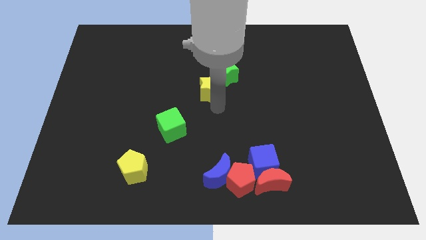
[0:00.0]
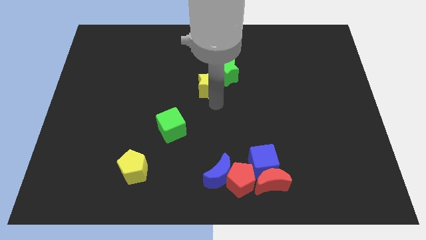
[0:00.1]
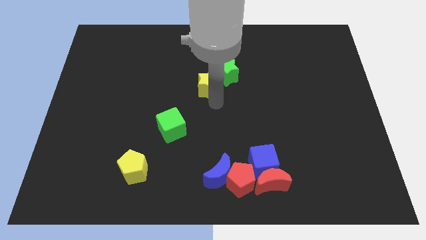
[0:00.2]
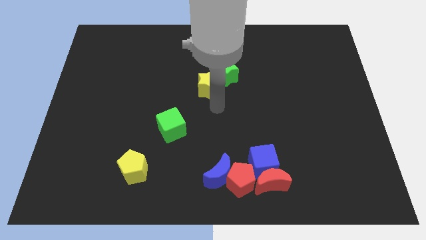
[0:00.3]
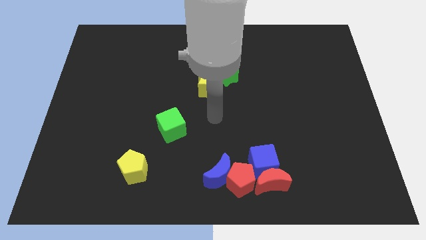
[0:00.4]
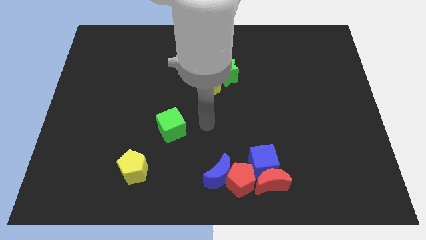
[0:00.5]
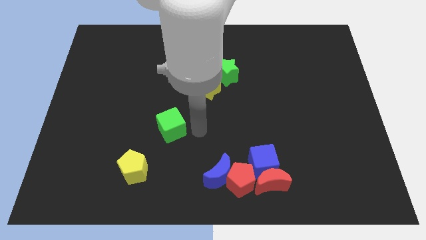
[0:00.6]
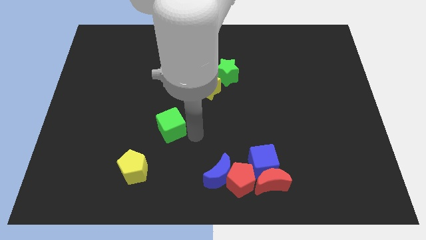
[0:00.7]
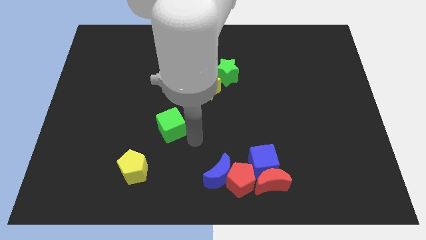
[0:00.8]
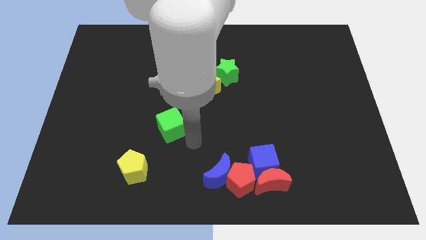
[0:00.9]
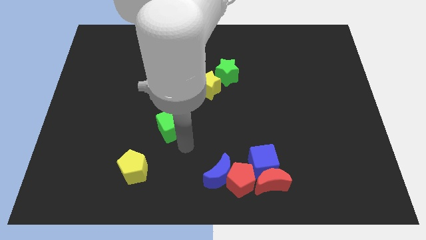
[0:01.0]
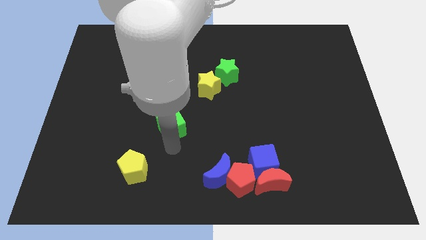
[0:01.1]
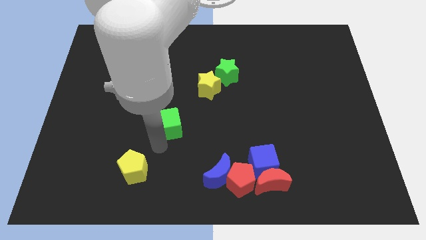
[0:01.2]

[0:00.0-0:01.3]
point your arm below green cube

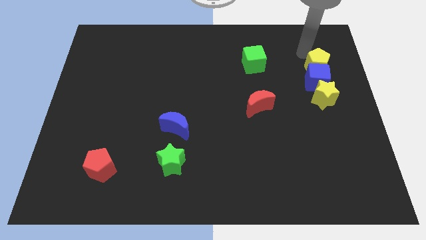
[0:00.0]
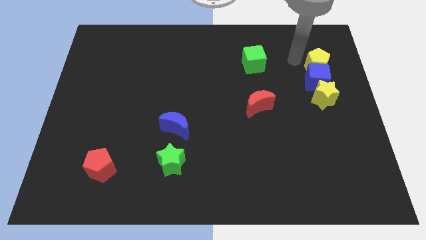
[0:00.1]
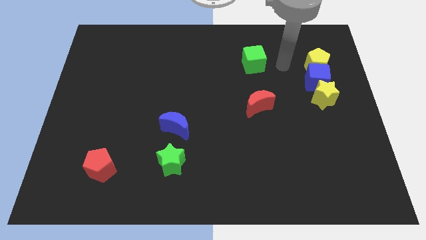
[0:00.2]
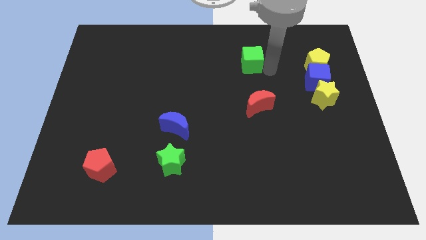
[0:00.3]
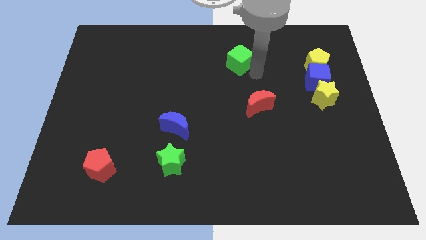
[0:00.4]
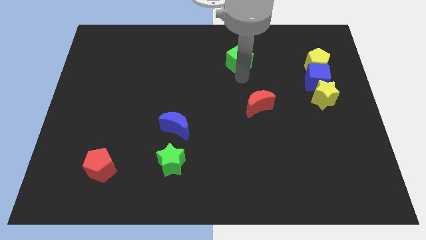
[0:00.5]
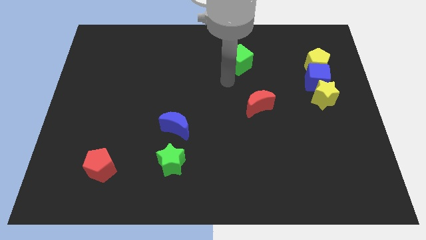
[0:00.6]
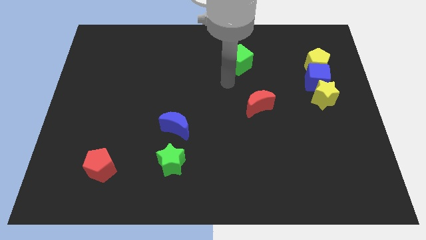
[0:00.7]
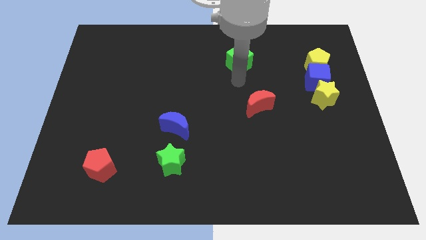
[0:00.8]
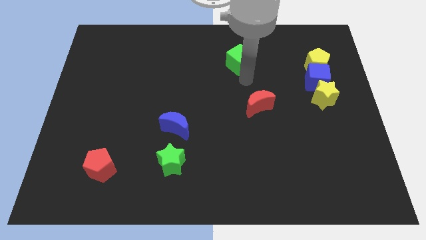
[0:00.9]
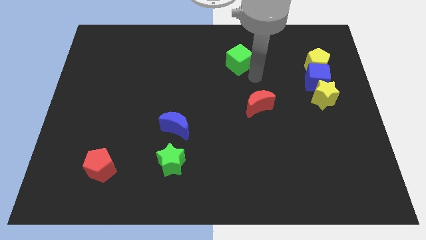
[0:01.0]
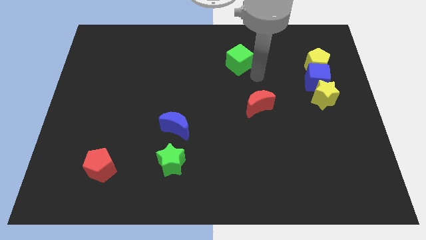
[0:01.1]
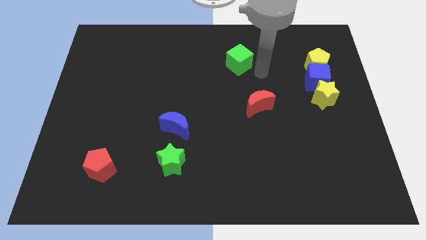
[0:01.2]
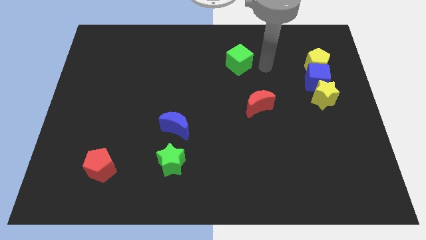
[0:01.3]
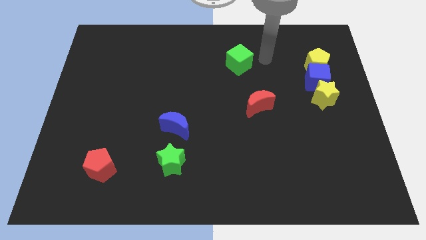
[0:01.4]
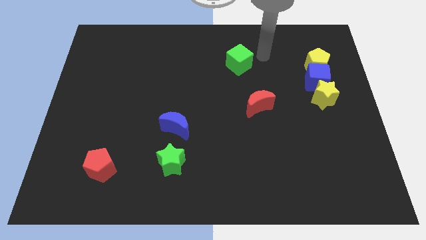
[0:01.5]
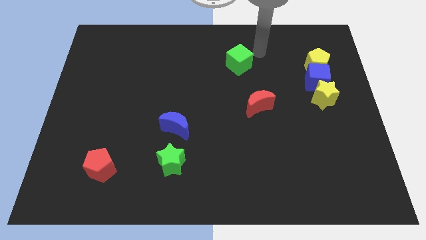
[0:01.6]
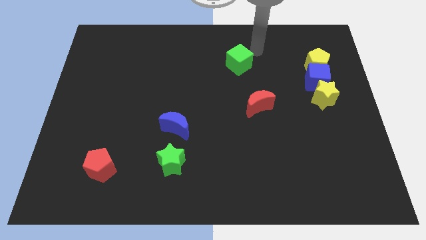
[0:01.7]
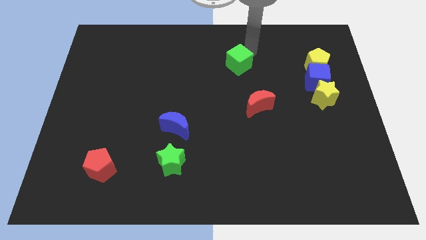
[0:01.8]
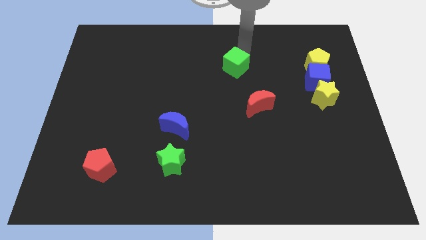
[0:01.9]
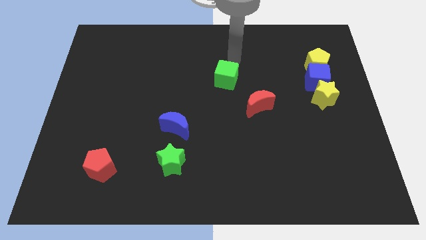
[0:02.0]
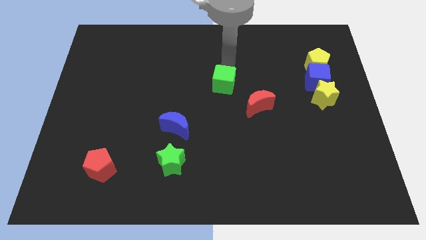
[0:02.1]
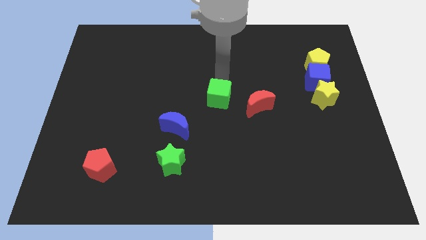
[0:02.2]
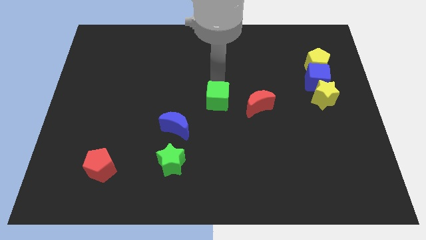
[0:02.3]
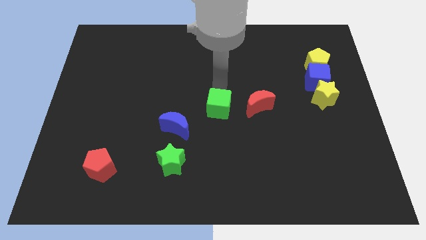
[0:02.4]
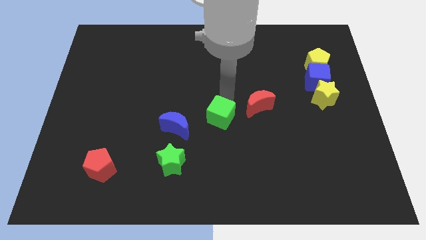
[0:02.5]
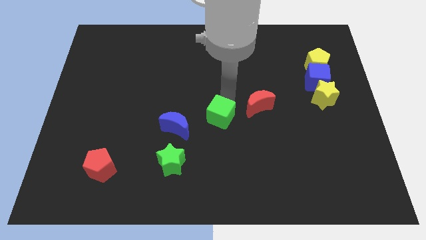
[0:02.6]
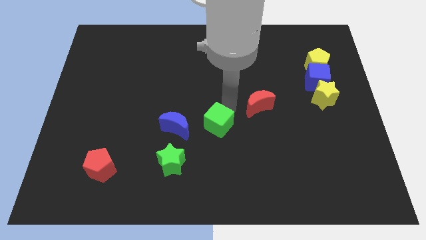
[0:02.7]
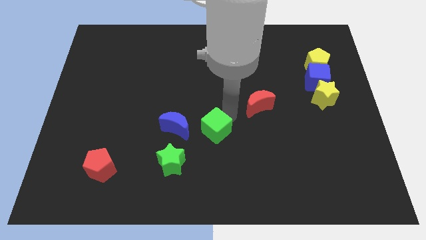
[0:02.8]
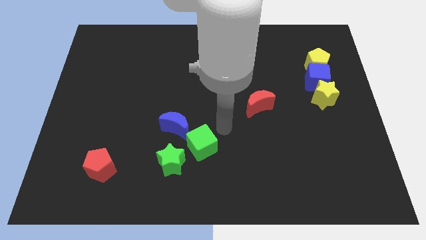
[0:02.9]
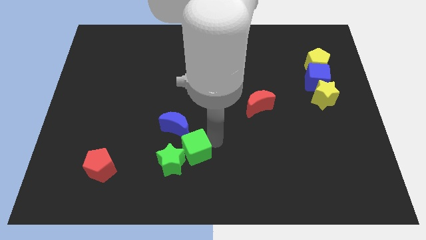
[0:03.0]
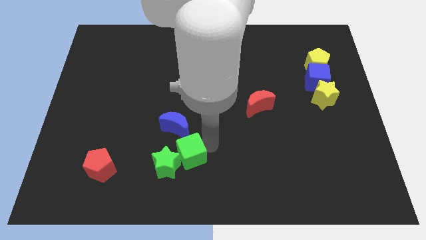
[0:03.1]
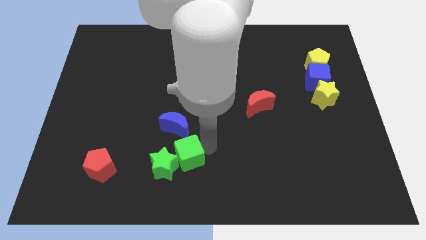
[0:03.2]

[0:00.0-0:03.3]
place the green cube diagonally down to the blue moon

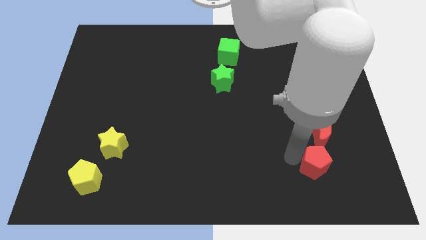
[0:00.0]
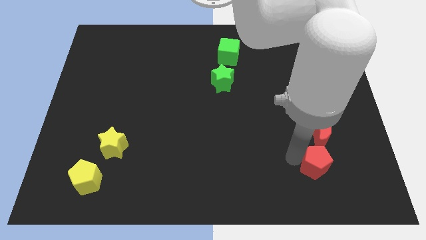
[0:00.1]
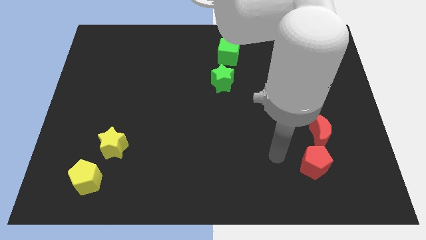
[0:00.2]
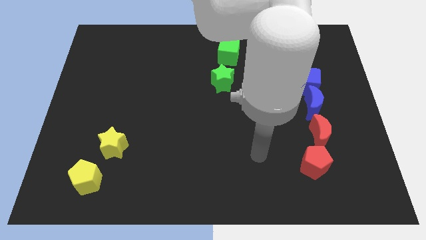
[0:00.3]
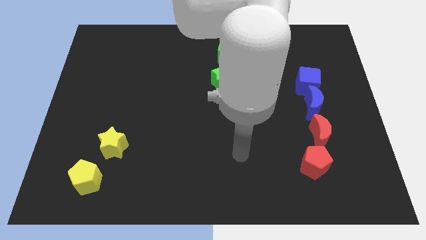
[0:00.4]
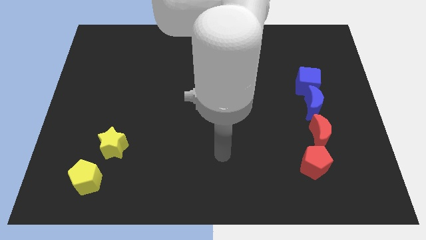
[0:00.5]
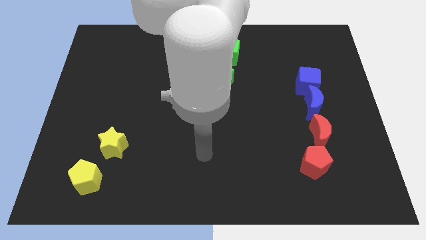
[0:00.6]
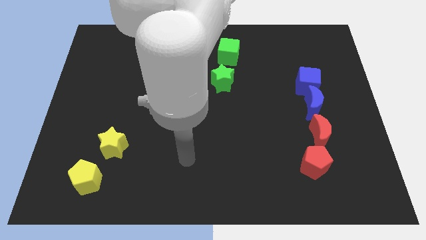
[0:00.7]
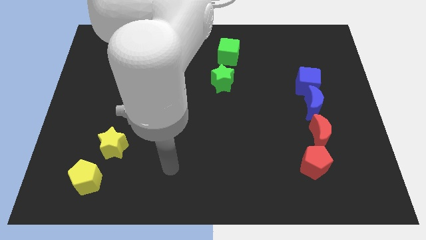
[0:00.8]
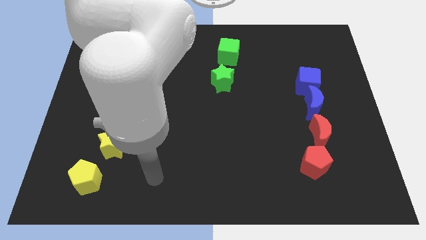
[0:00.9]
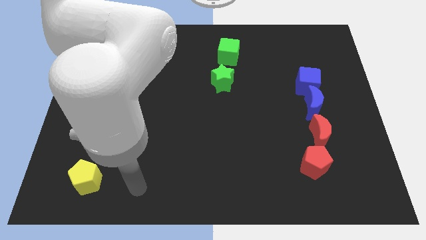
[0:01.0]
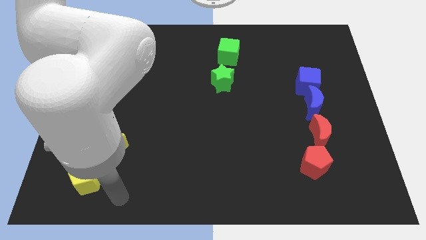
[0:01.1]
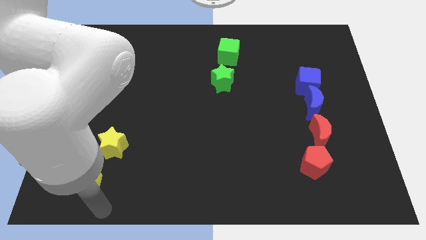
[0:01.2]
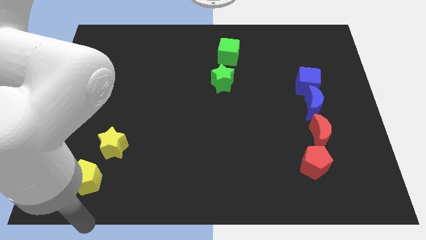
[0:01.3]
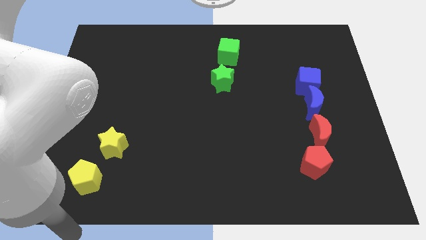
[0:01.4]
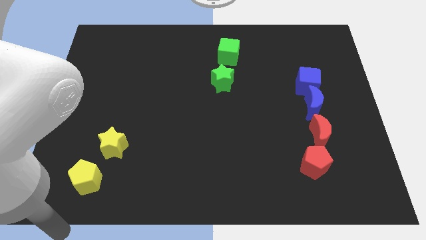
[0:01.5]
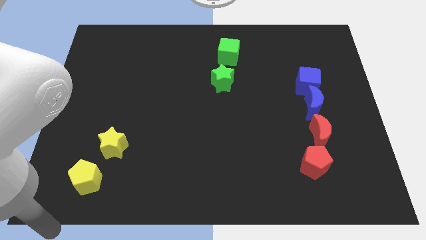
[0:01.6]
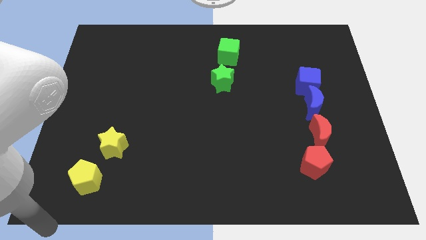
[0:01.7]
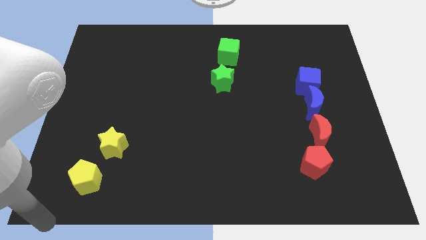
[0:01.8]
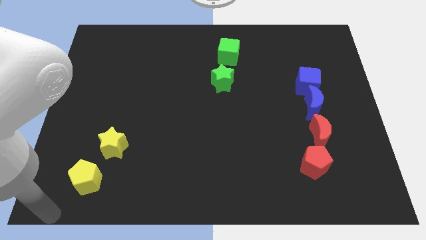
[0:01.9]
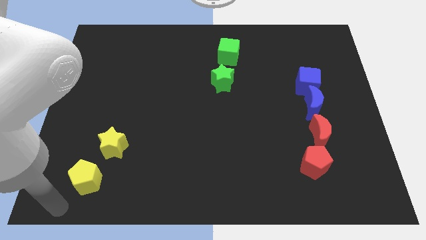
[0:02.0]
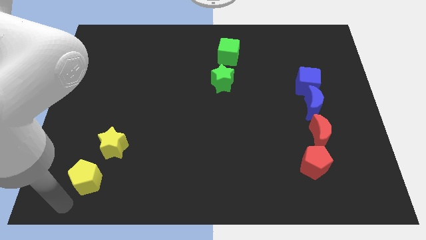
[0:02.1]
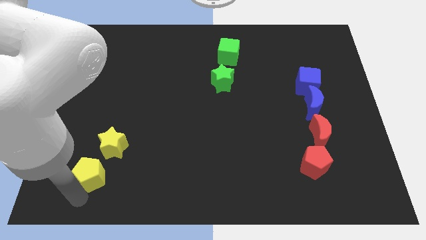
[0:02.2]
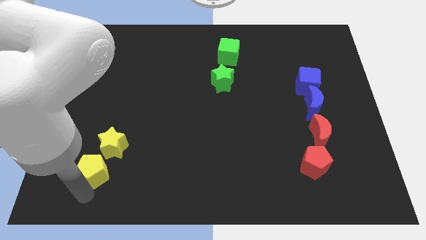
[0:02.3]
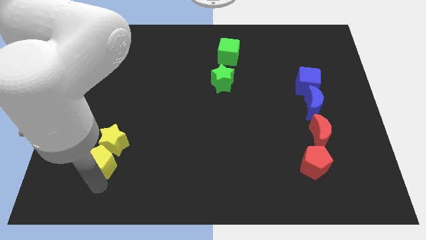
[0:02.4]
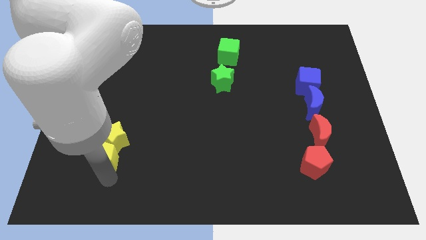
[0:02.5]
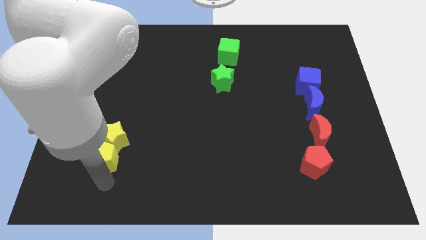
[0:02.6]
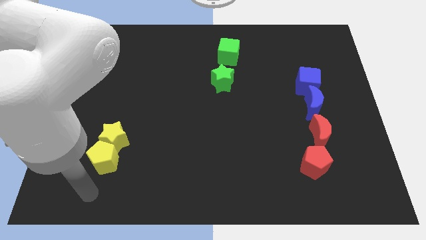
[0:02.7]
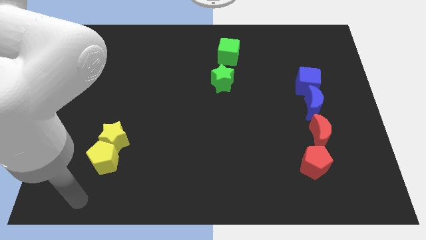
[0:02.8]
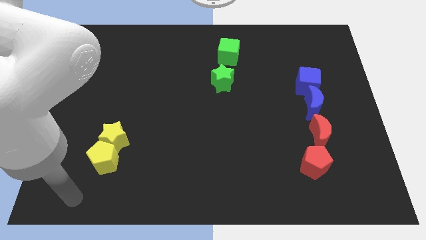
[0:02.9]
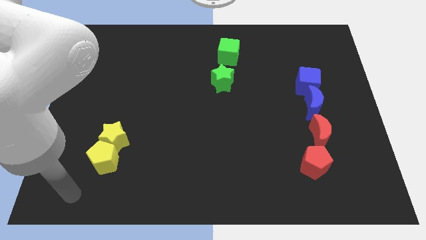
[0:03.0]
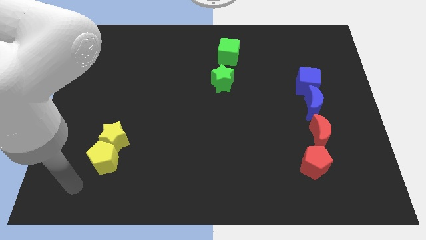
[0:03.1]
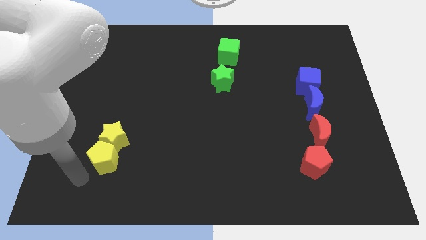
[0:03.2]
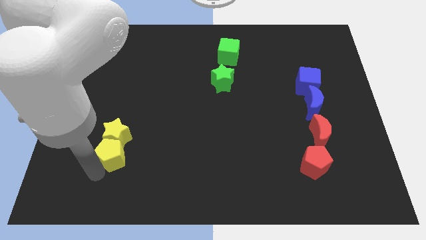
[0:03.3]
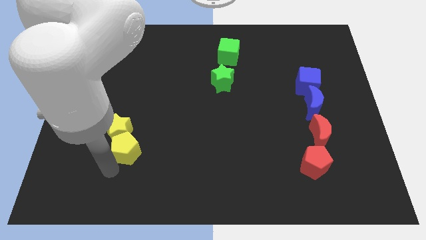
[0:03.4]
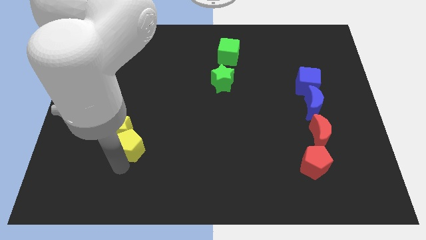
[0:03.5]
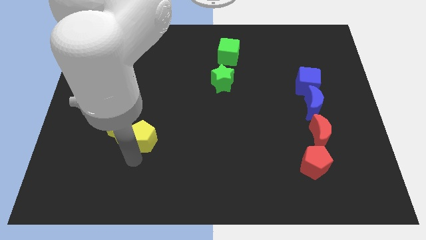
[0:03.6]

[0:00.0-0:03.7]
push yellow pentagon in to yellow star

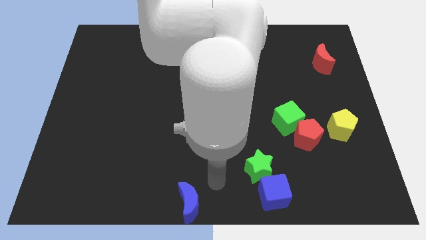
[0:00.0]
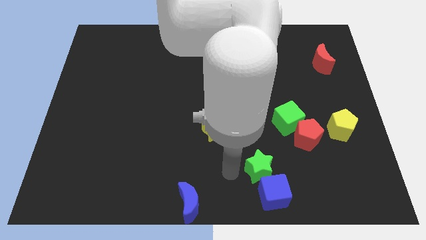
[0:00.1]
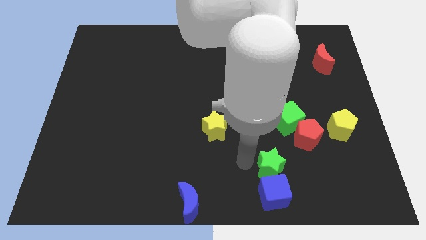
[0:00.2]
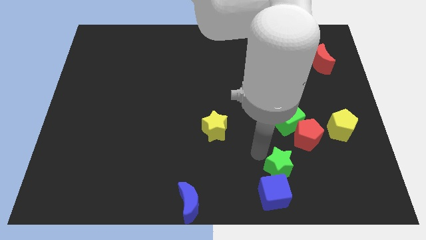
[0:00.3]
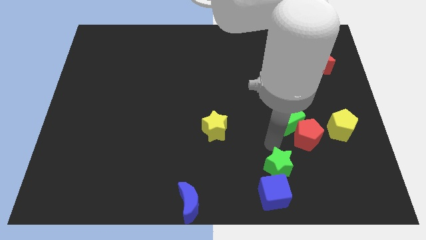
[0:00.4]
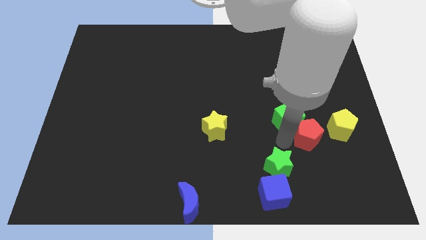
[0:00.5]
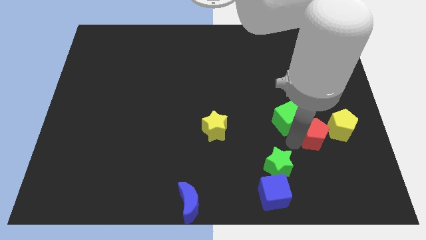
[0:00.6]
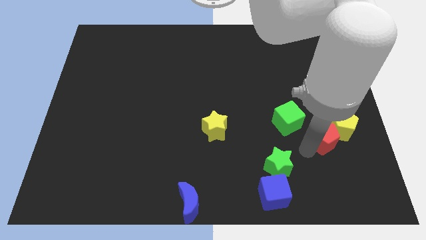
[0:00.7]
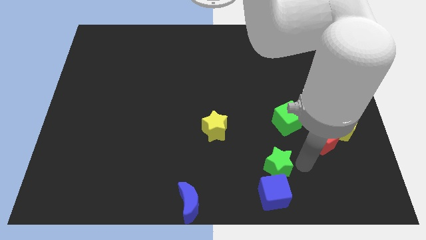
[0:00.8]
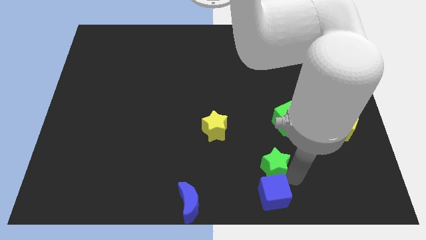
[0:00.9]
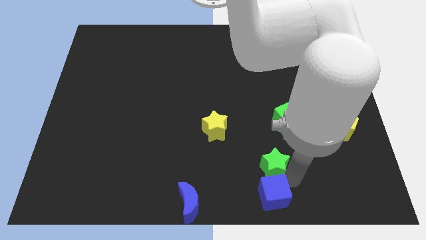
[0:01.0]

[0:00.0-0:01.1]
tap at the top side of the green star
